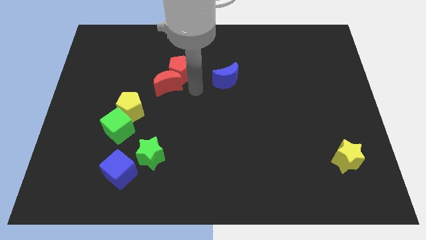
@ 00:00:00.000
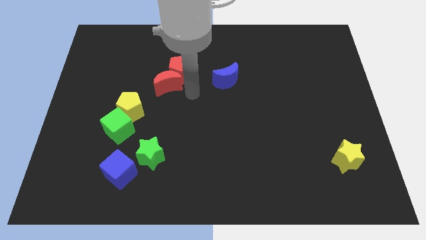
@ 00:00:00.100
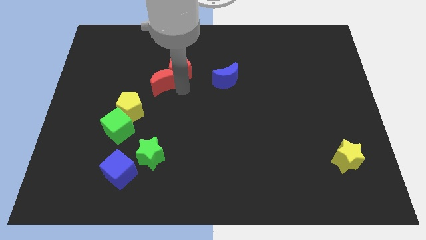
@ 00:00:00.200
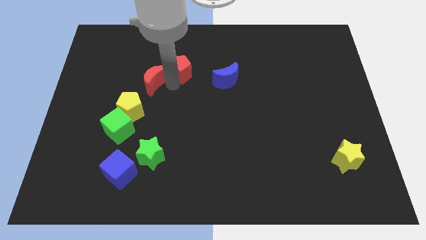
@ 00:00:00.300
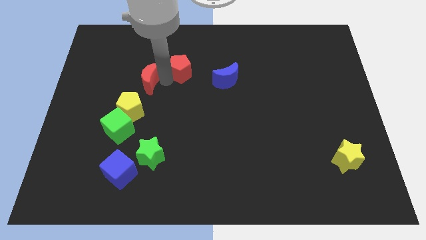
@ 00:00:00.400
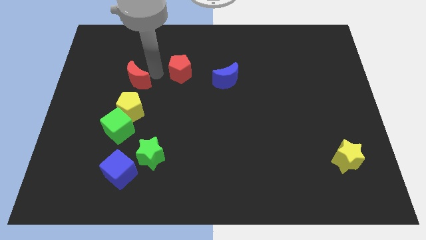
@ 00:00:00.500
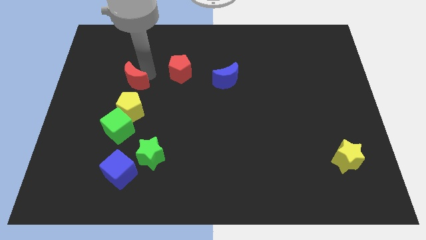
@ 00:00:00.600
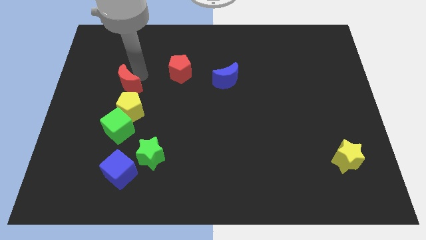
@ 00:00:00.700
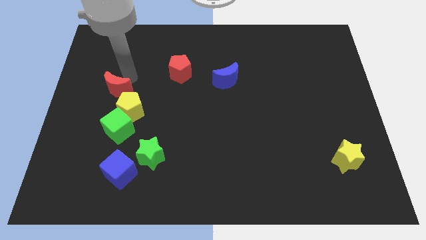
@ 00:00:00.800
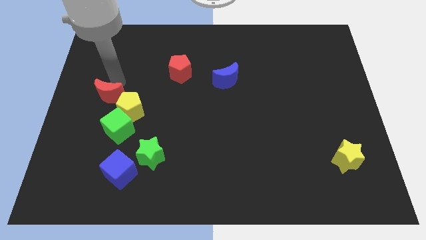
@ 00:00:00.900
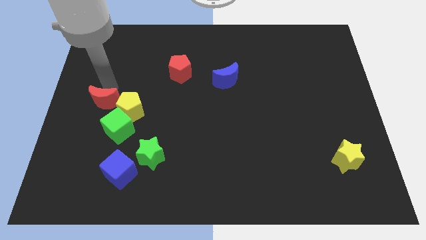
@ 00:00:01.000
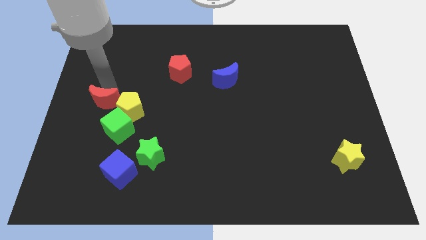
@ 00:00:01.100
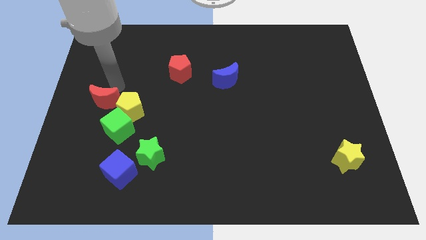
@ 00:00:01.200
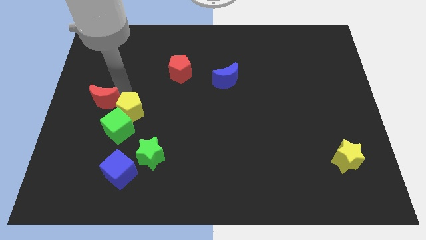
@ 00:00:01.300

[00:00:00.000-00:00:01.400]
place the red crescent to the left of the yellow pentagon

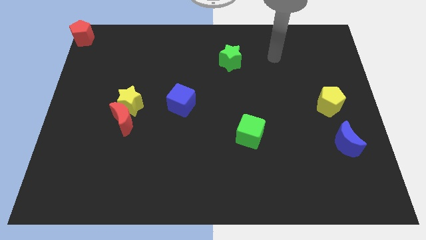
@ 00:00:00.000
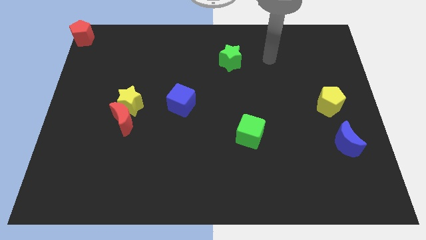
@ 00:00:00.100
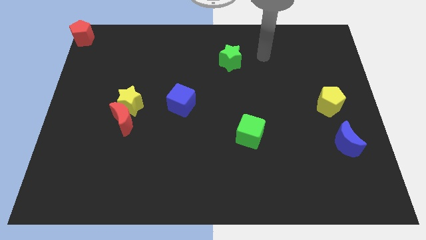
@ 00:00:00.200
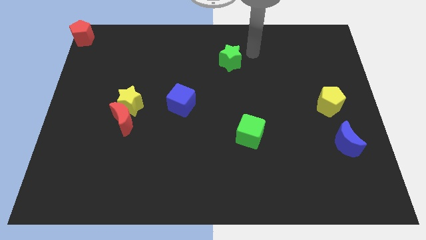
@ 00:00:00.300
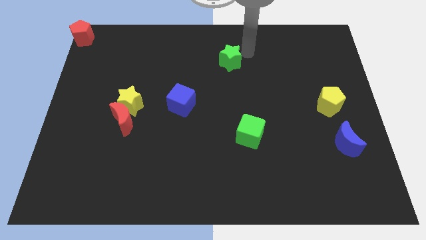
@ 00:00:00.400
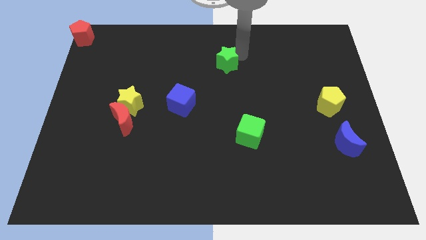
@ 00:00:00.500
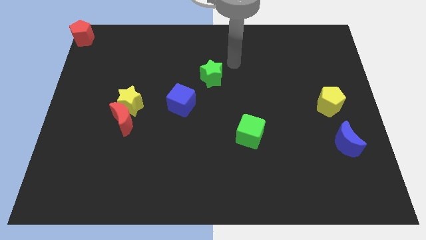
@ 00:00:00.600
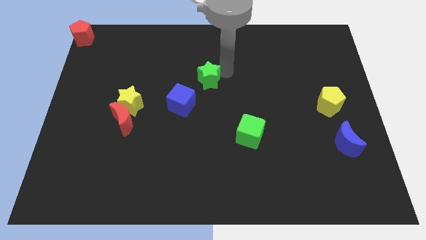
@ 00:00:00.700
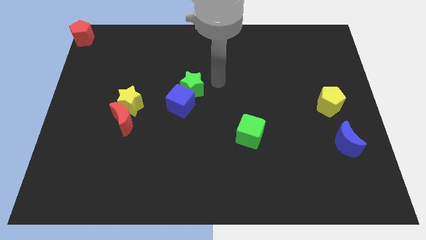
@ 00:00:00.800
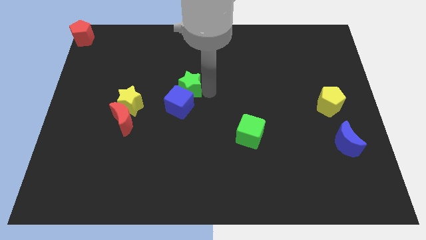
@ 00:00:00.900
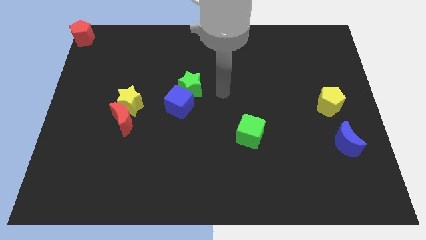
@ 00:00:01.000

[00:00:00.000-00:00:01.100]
move the green star and blue cube together at the right of the yellow star

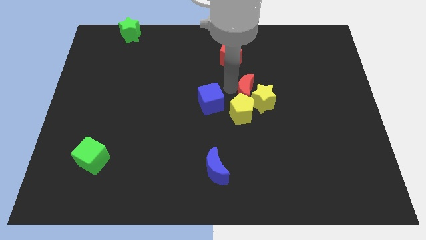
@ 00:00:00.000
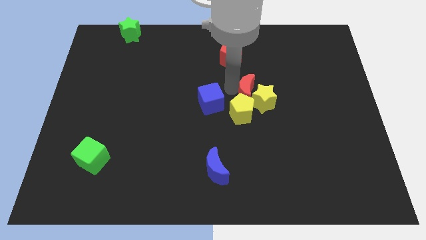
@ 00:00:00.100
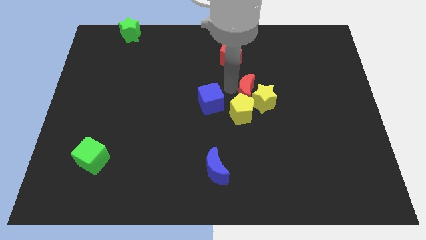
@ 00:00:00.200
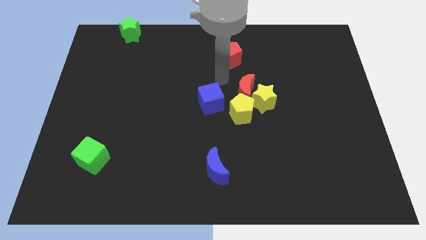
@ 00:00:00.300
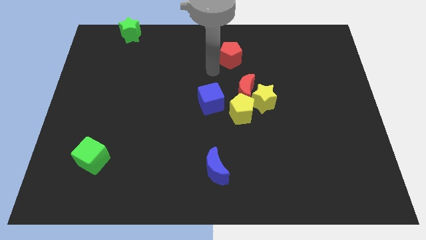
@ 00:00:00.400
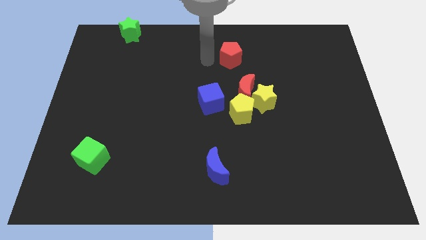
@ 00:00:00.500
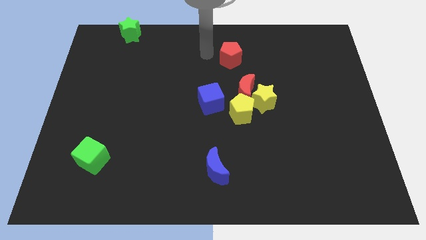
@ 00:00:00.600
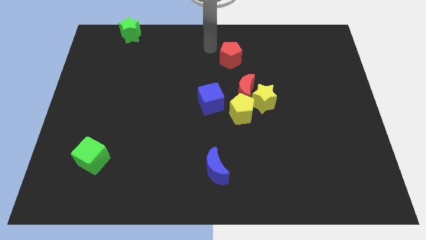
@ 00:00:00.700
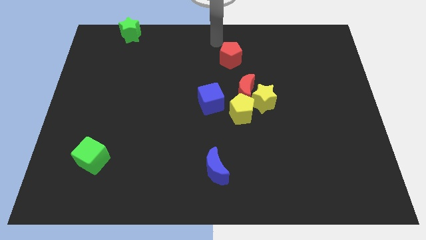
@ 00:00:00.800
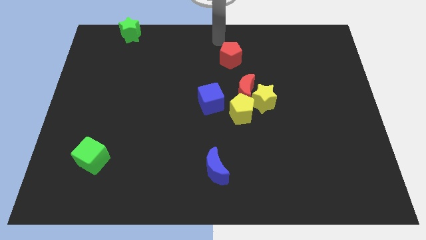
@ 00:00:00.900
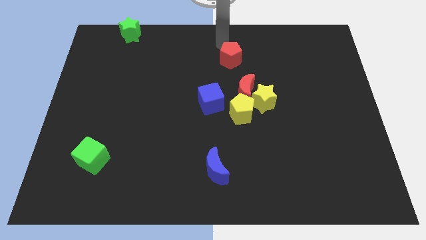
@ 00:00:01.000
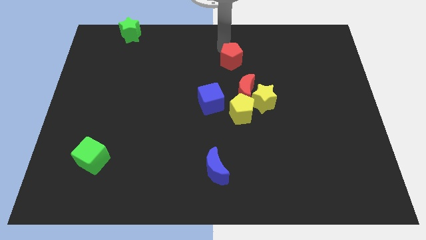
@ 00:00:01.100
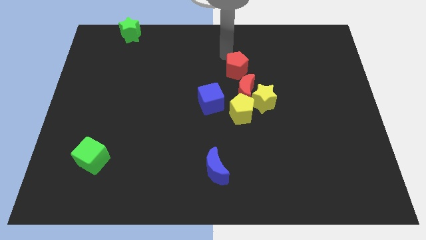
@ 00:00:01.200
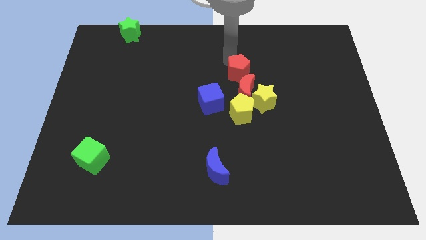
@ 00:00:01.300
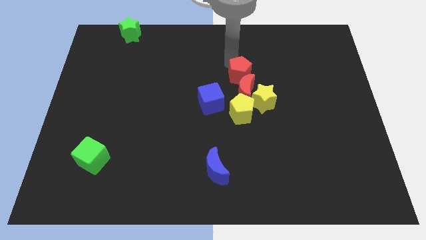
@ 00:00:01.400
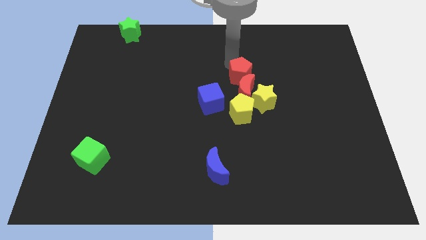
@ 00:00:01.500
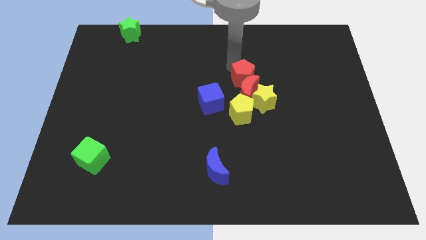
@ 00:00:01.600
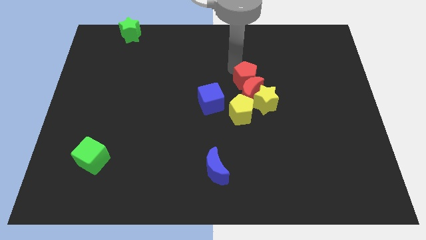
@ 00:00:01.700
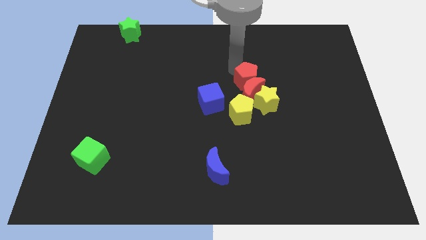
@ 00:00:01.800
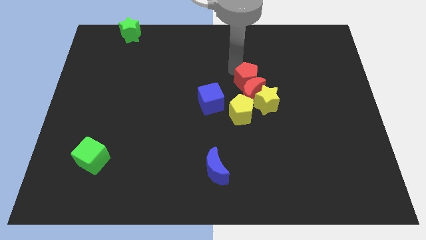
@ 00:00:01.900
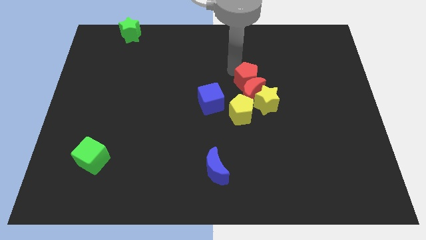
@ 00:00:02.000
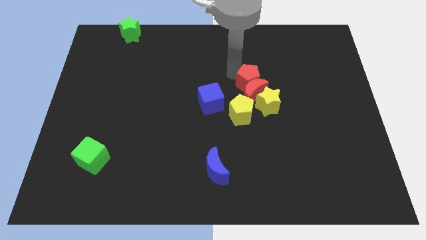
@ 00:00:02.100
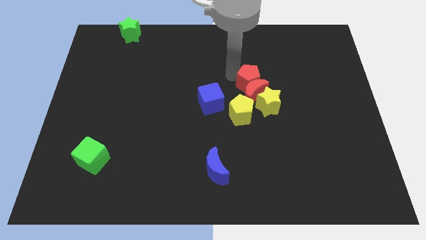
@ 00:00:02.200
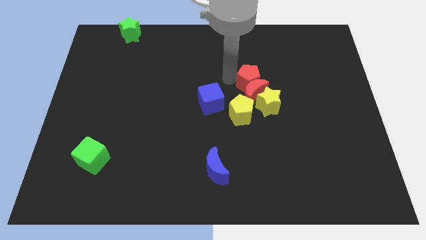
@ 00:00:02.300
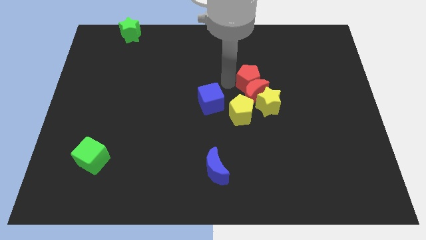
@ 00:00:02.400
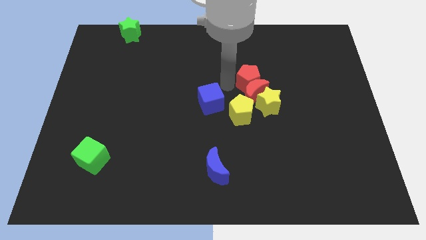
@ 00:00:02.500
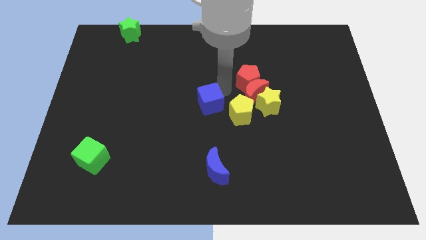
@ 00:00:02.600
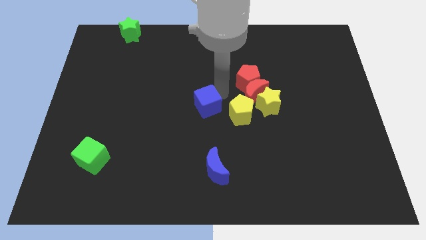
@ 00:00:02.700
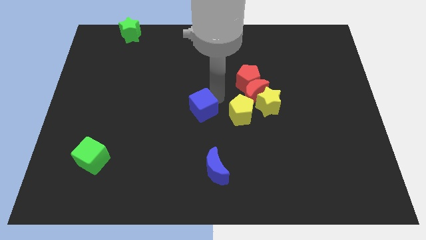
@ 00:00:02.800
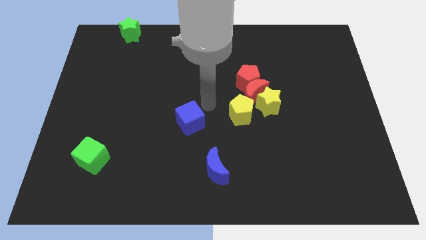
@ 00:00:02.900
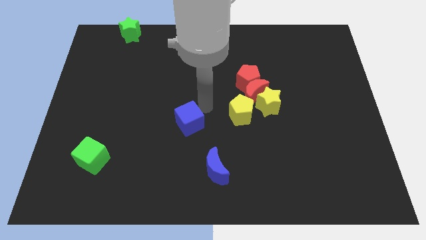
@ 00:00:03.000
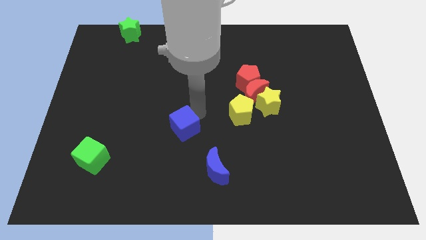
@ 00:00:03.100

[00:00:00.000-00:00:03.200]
push red pentagon into the red crescent

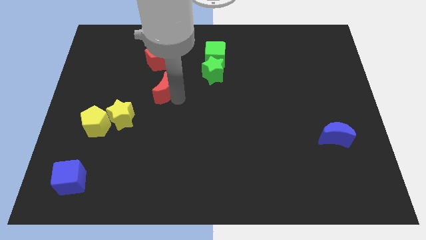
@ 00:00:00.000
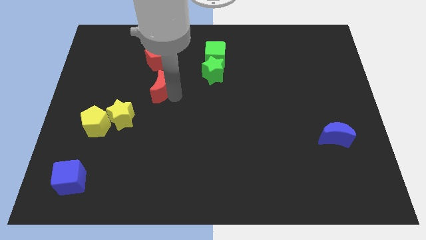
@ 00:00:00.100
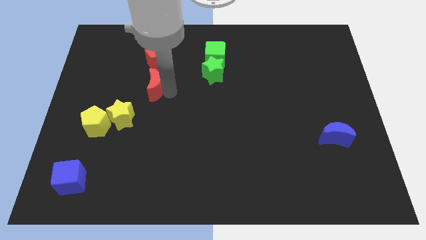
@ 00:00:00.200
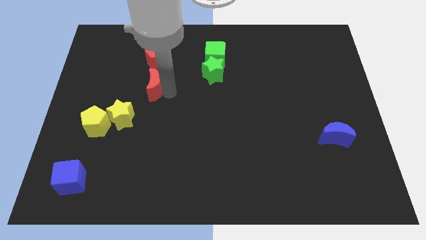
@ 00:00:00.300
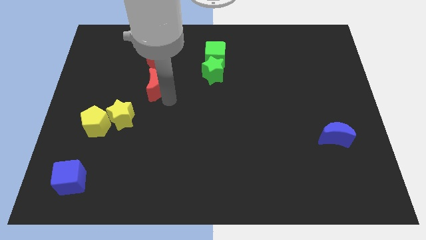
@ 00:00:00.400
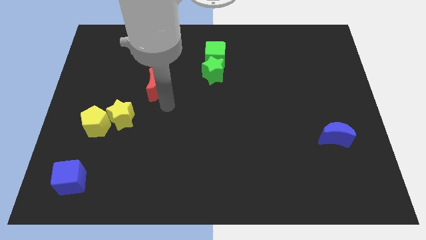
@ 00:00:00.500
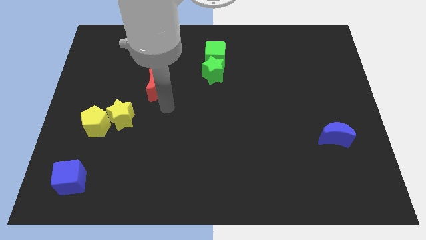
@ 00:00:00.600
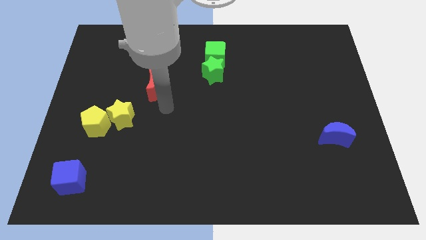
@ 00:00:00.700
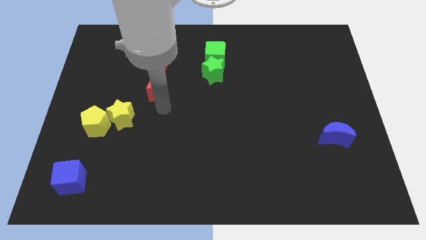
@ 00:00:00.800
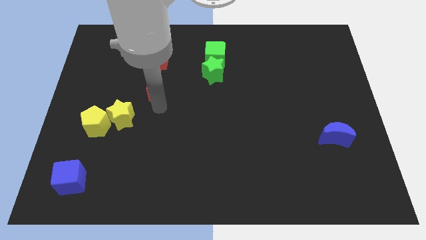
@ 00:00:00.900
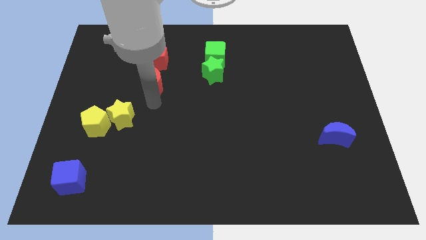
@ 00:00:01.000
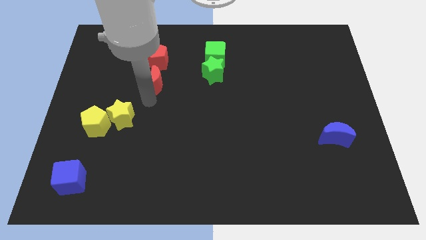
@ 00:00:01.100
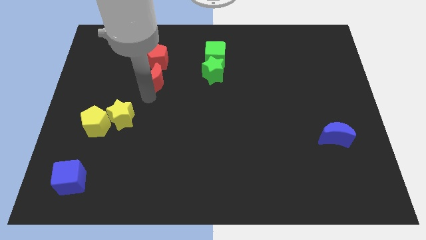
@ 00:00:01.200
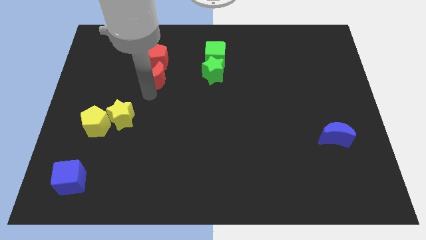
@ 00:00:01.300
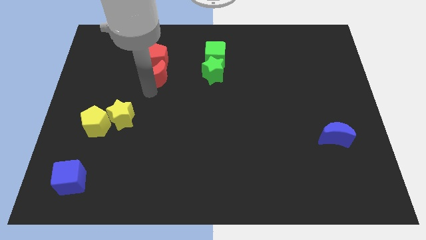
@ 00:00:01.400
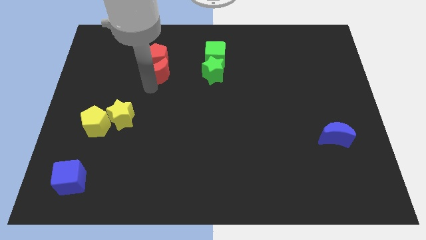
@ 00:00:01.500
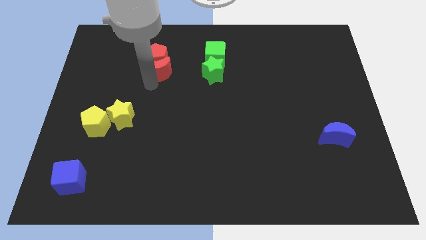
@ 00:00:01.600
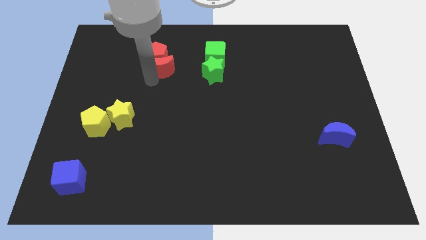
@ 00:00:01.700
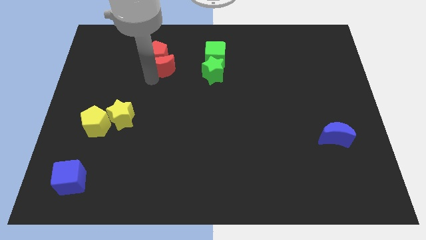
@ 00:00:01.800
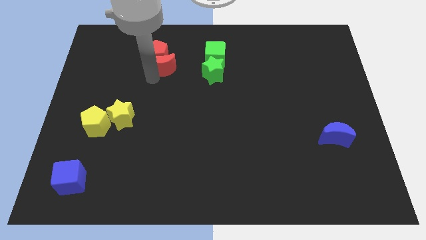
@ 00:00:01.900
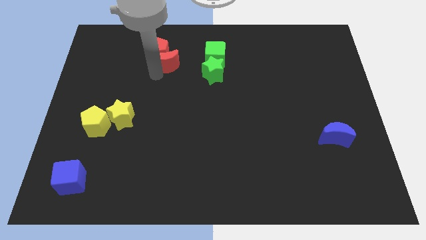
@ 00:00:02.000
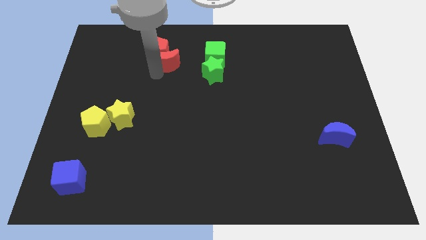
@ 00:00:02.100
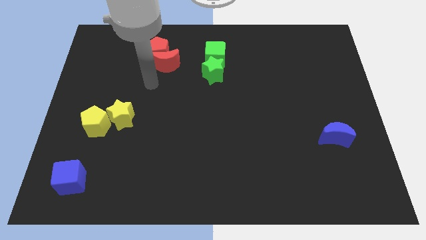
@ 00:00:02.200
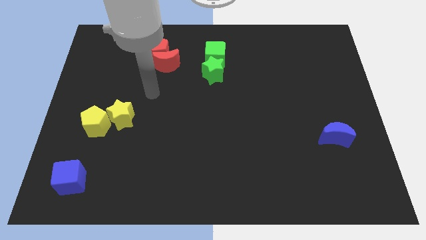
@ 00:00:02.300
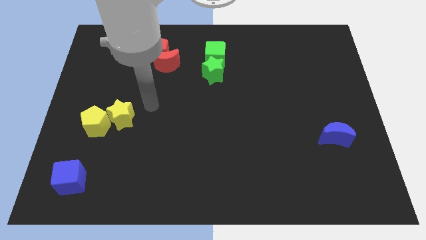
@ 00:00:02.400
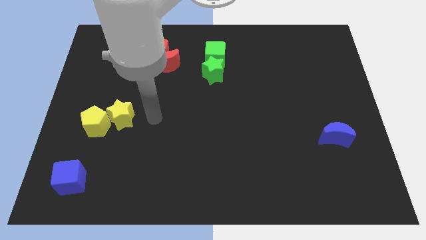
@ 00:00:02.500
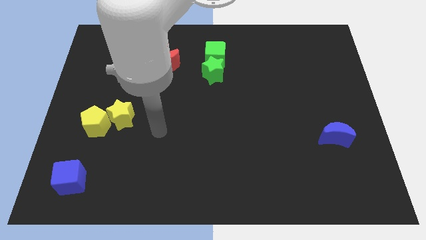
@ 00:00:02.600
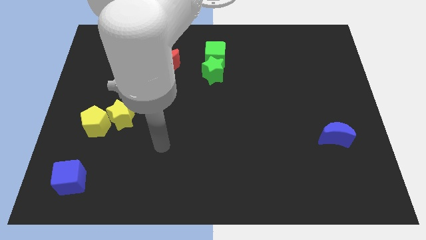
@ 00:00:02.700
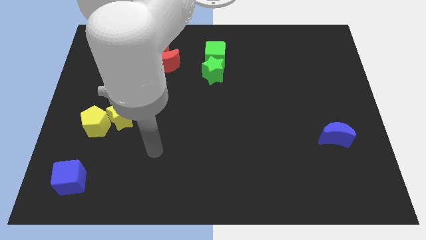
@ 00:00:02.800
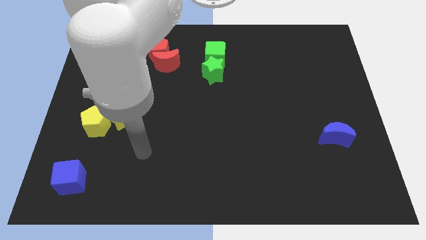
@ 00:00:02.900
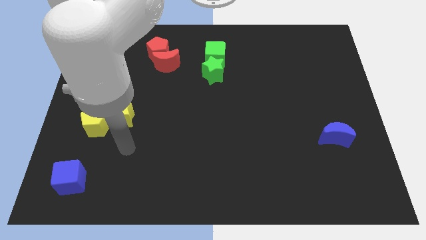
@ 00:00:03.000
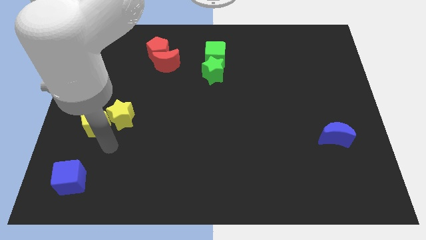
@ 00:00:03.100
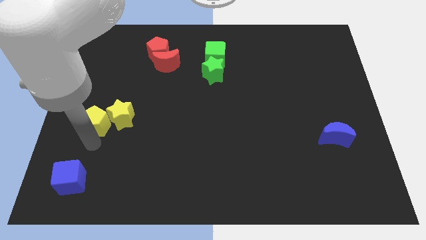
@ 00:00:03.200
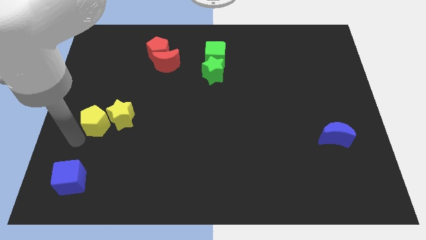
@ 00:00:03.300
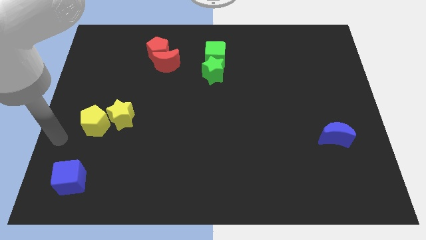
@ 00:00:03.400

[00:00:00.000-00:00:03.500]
push the red moon into the red pentagon
